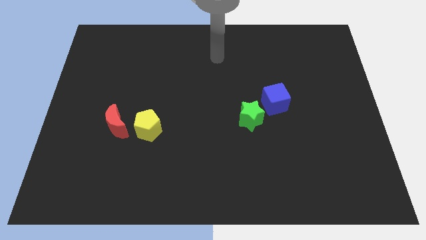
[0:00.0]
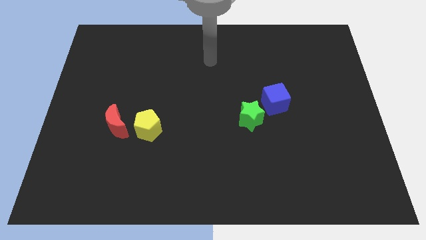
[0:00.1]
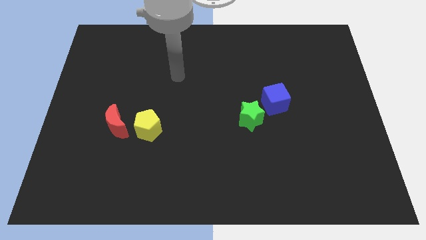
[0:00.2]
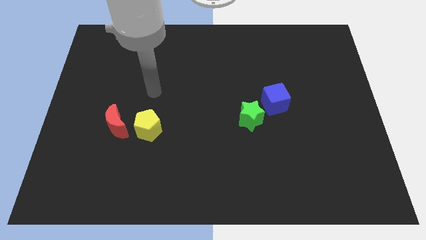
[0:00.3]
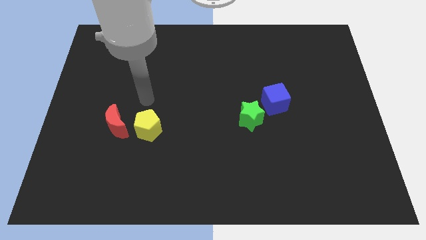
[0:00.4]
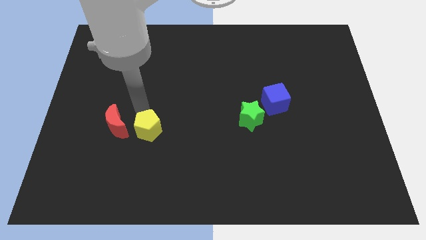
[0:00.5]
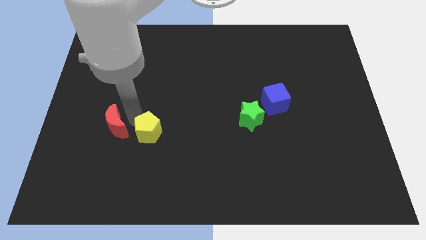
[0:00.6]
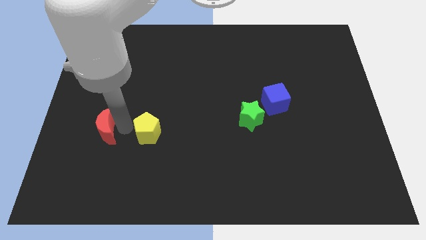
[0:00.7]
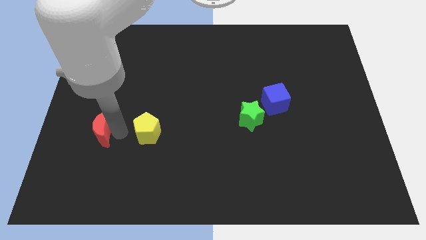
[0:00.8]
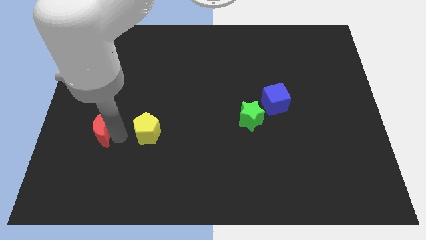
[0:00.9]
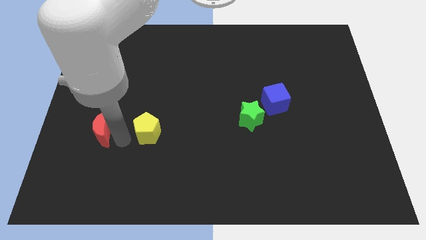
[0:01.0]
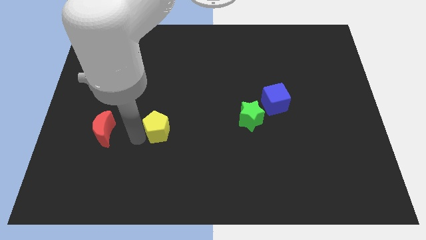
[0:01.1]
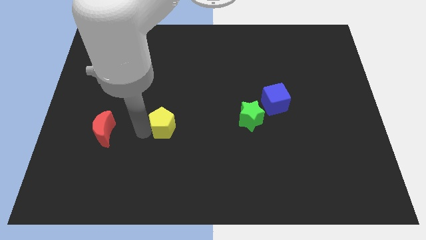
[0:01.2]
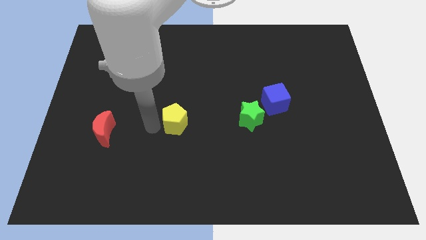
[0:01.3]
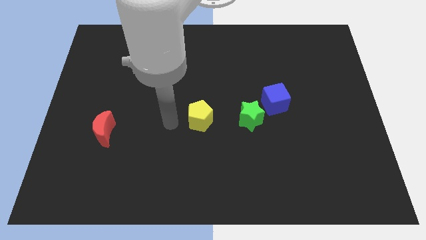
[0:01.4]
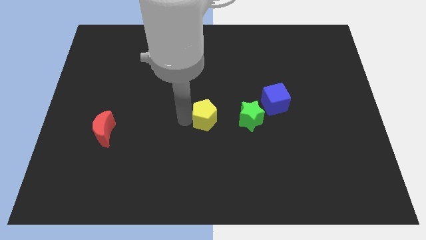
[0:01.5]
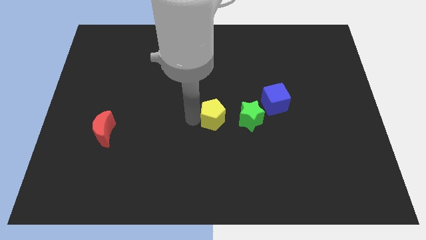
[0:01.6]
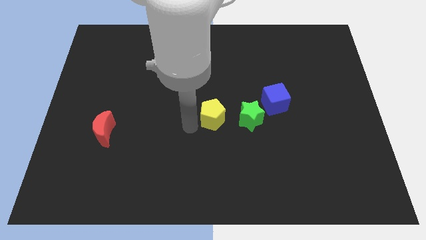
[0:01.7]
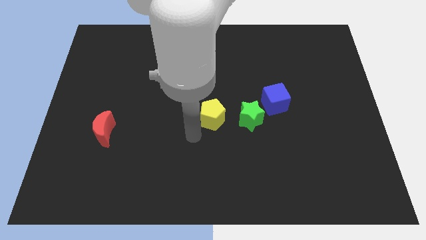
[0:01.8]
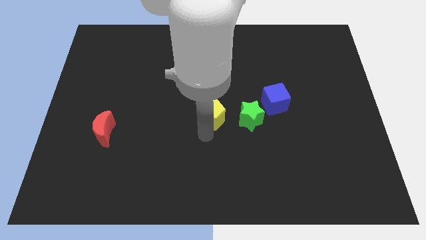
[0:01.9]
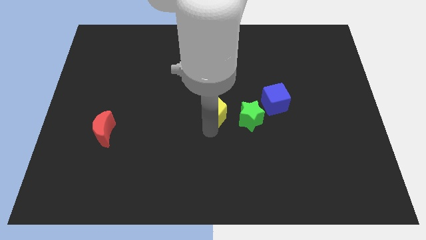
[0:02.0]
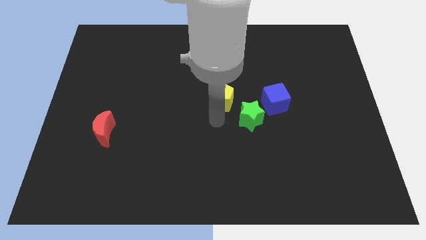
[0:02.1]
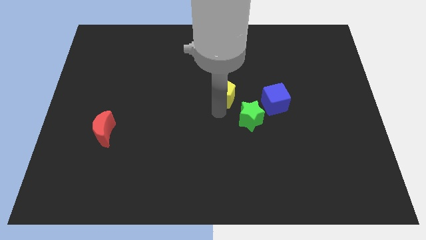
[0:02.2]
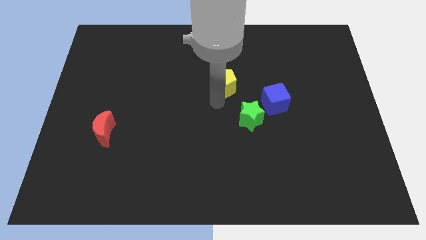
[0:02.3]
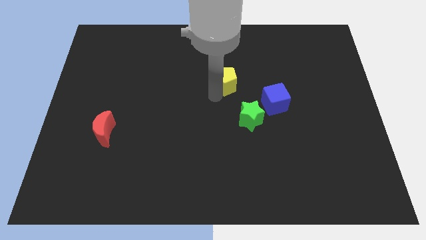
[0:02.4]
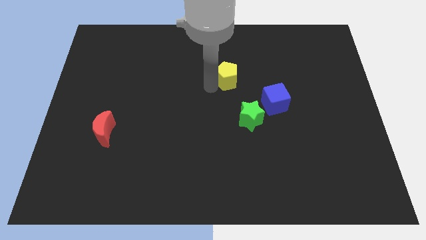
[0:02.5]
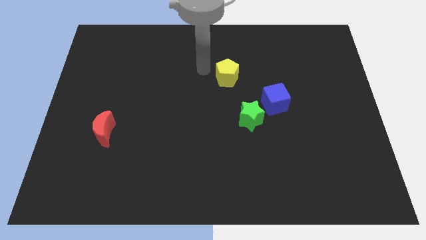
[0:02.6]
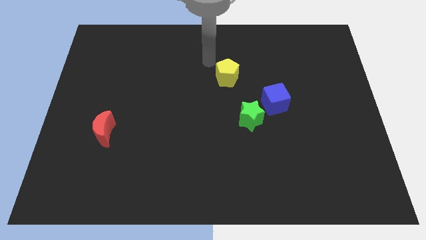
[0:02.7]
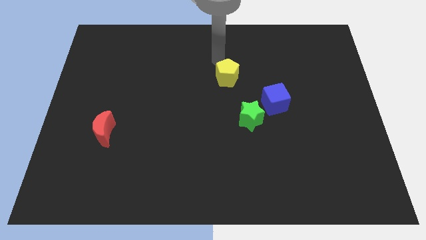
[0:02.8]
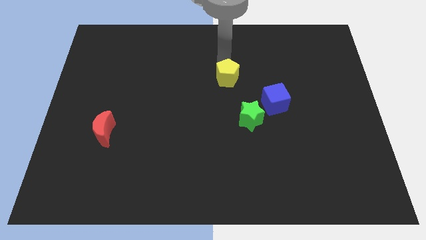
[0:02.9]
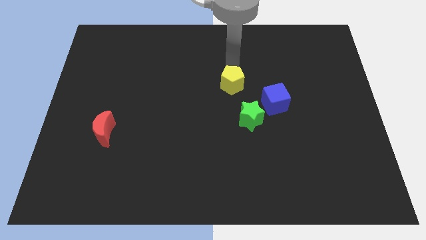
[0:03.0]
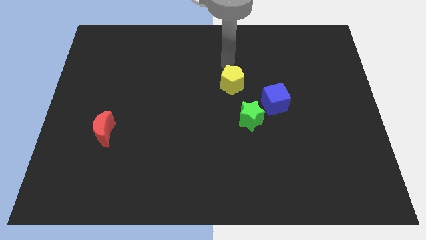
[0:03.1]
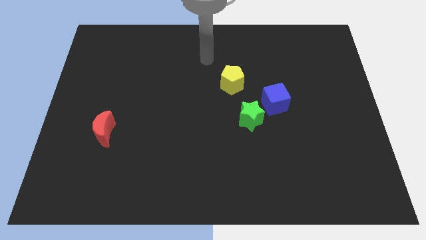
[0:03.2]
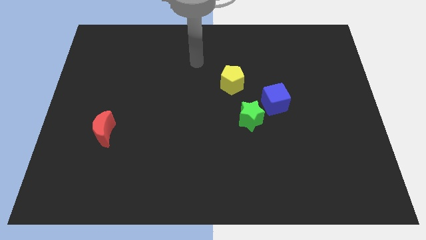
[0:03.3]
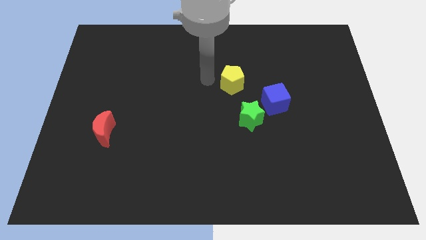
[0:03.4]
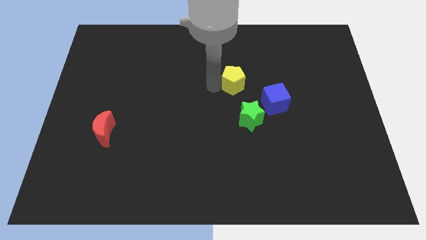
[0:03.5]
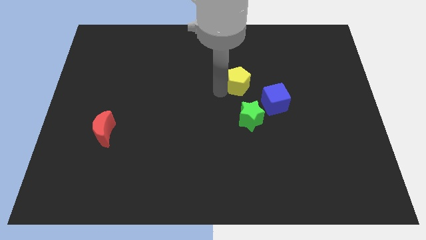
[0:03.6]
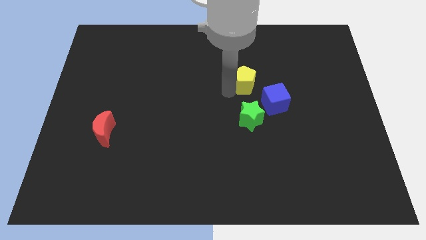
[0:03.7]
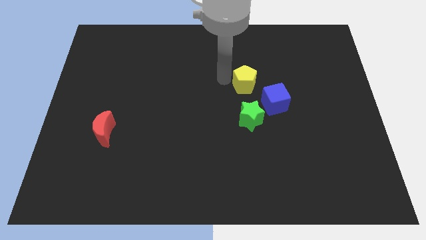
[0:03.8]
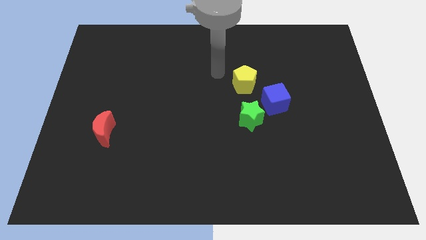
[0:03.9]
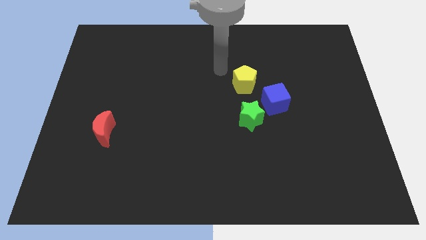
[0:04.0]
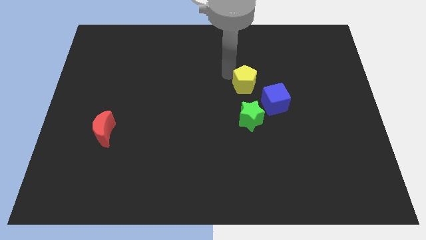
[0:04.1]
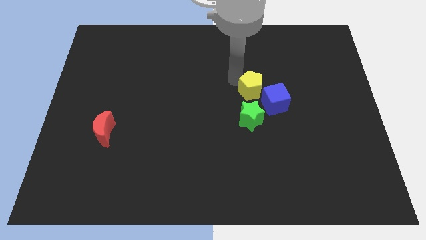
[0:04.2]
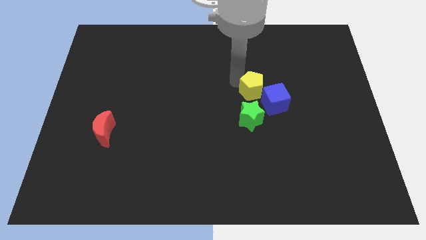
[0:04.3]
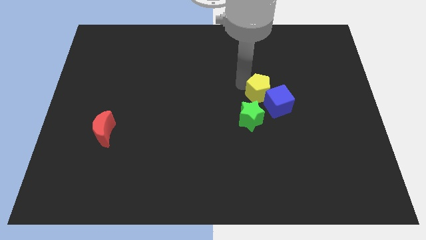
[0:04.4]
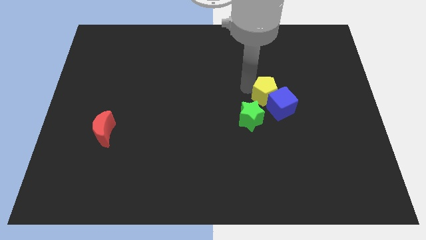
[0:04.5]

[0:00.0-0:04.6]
push the yellow pentagon to the blue block

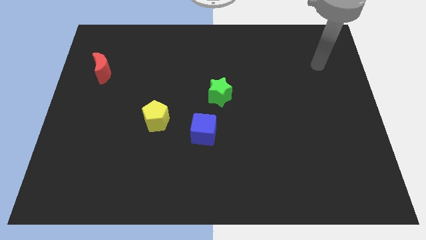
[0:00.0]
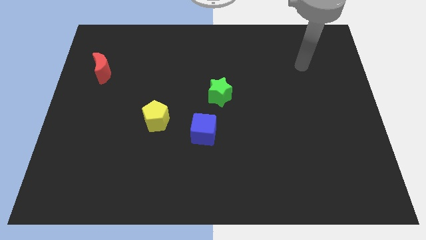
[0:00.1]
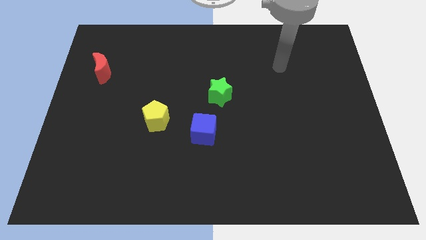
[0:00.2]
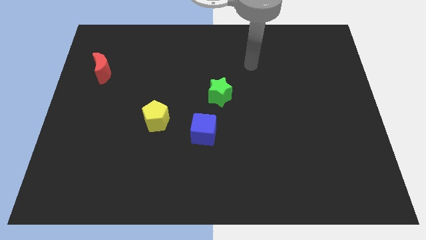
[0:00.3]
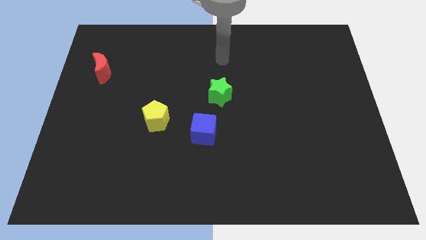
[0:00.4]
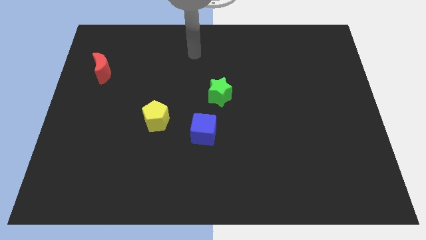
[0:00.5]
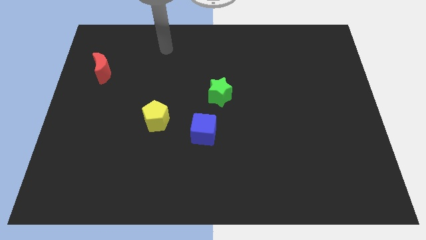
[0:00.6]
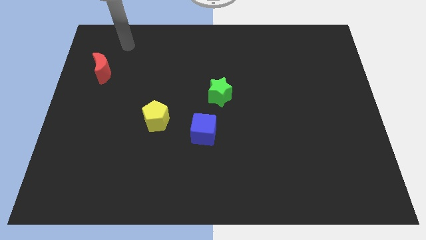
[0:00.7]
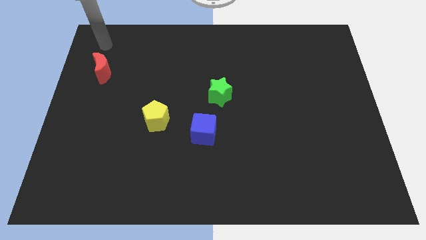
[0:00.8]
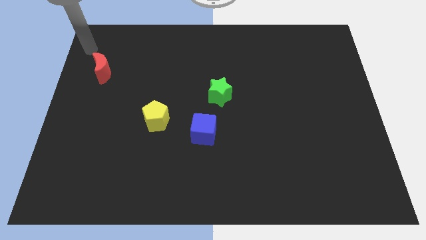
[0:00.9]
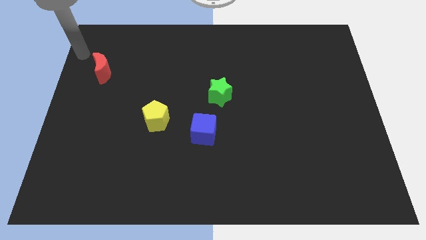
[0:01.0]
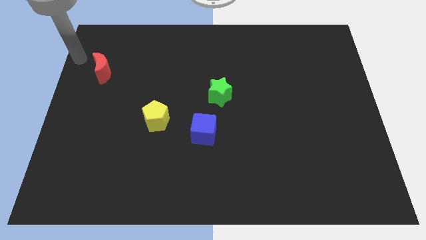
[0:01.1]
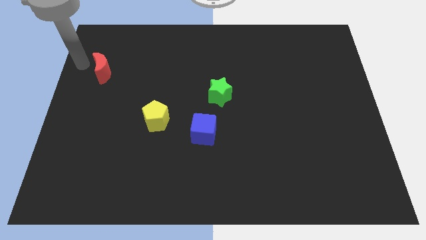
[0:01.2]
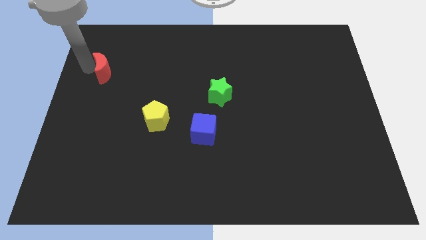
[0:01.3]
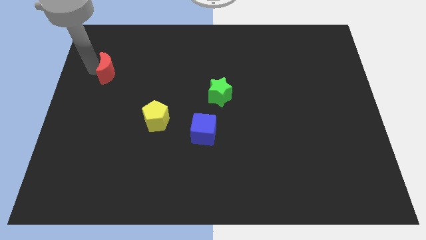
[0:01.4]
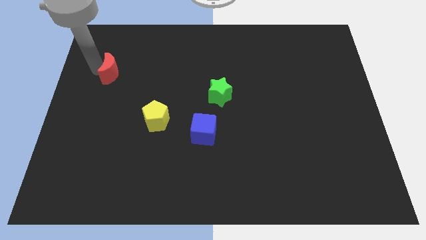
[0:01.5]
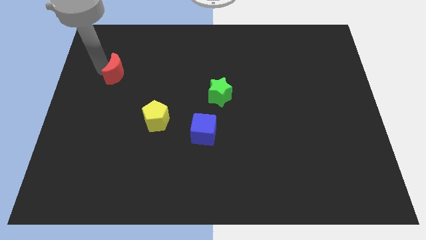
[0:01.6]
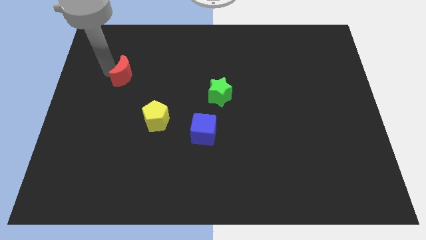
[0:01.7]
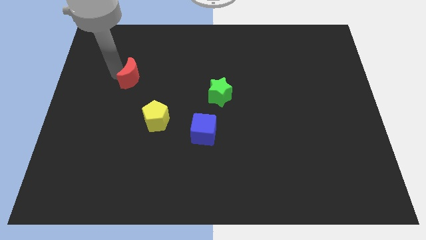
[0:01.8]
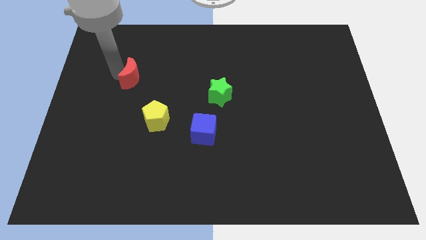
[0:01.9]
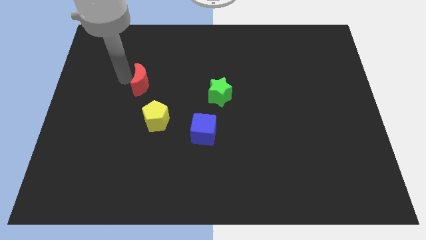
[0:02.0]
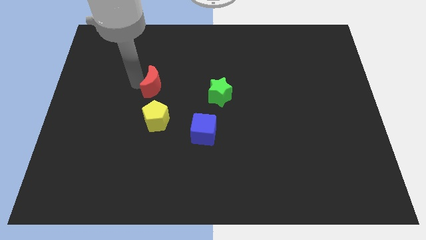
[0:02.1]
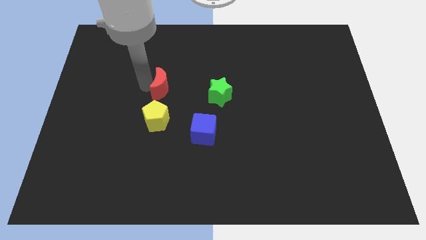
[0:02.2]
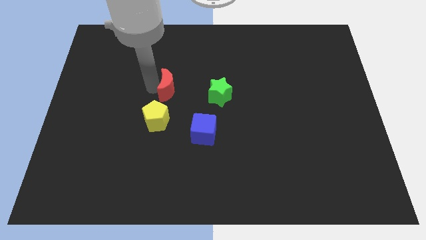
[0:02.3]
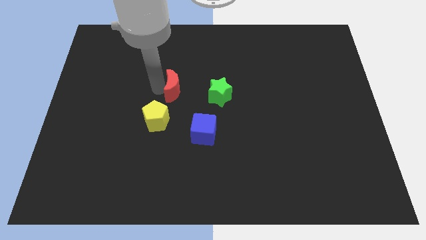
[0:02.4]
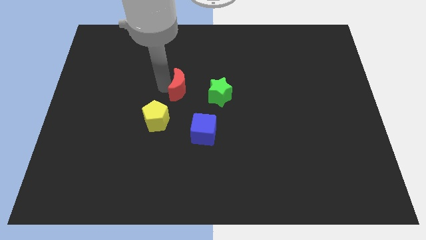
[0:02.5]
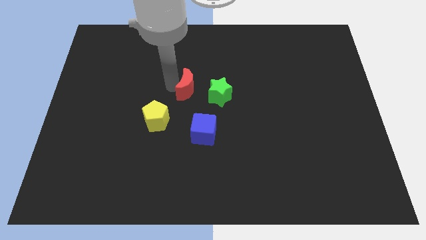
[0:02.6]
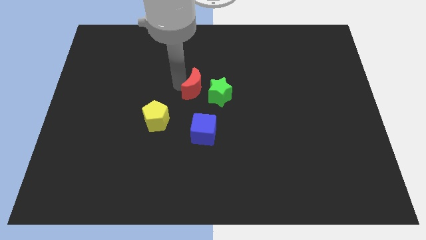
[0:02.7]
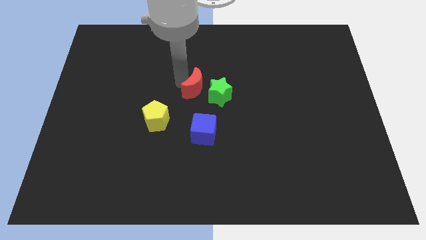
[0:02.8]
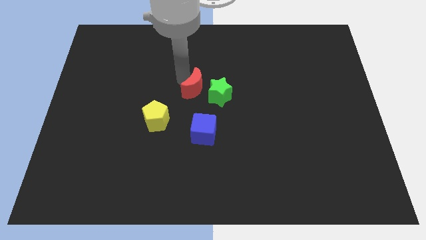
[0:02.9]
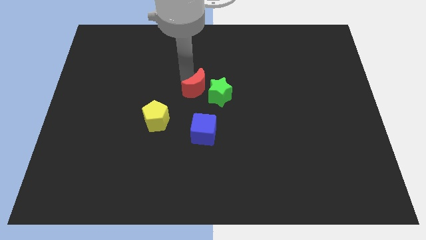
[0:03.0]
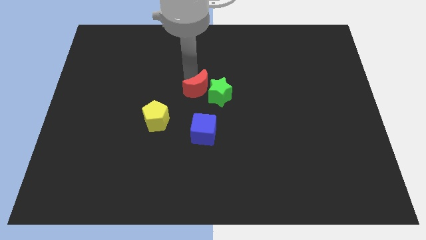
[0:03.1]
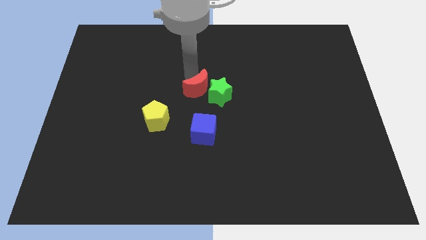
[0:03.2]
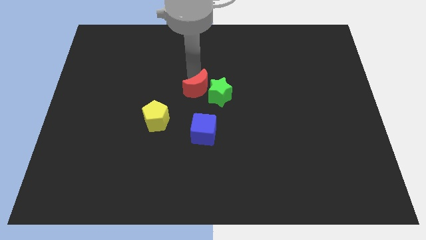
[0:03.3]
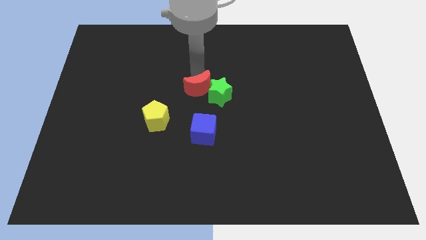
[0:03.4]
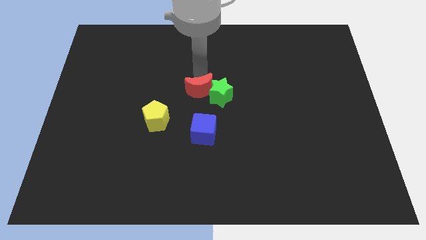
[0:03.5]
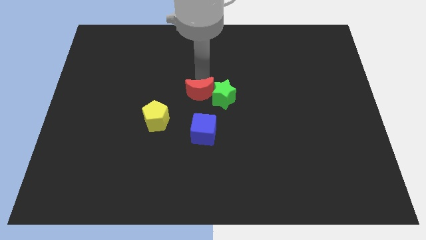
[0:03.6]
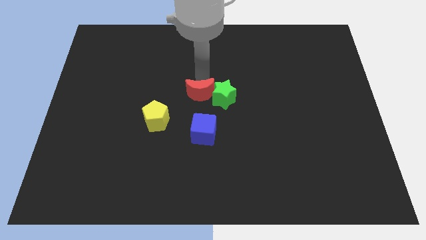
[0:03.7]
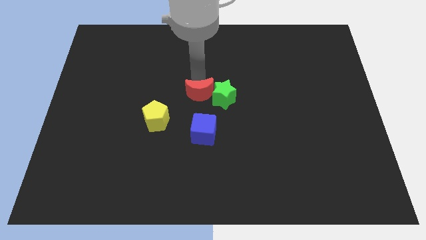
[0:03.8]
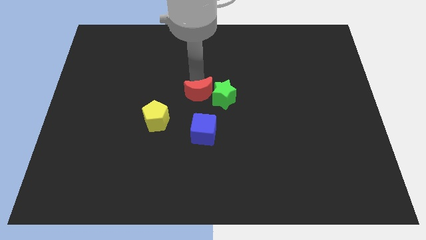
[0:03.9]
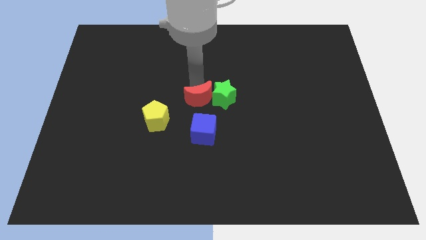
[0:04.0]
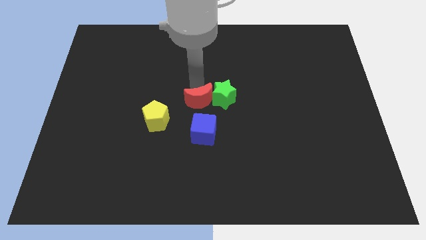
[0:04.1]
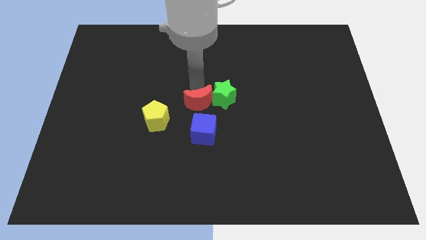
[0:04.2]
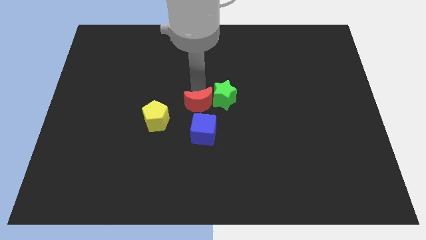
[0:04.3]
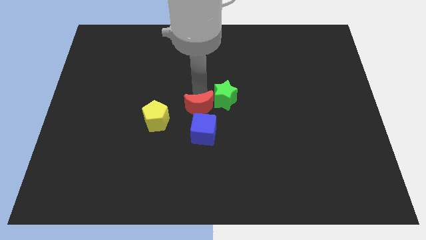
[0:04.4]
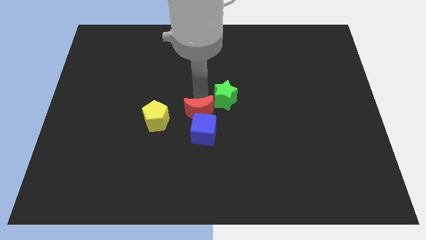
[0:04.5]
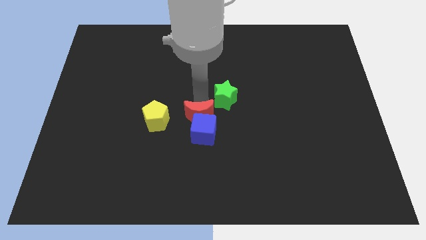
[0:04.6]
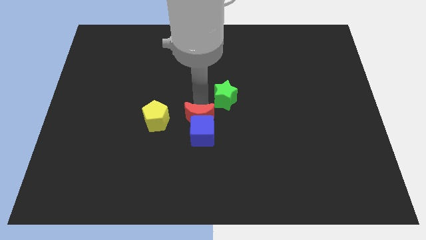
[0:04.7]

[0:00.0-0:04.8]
put the red moon next to the cube
